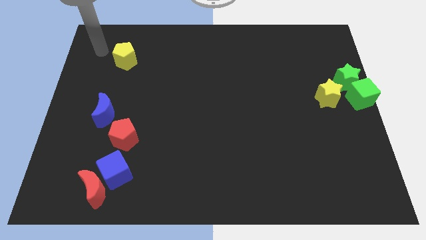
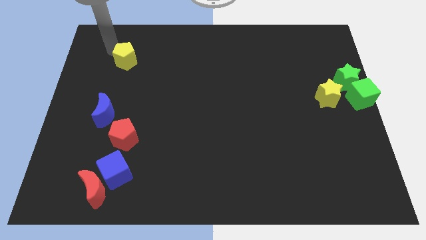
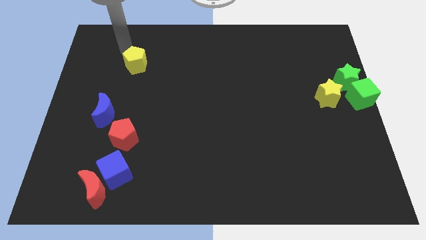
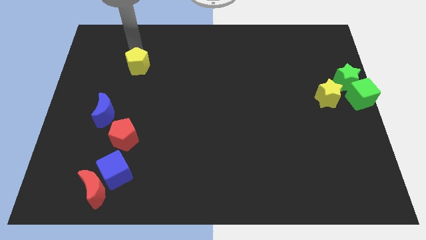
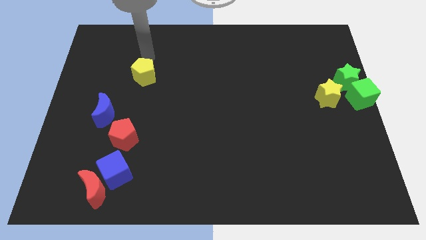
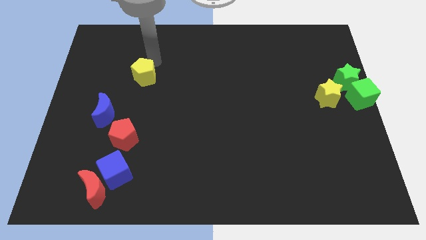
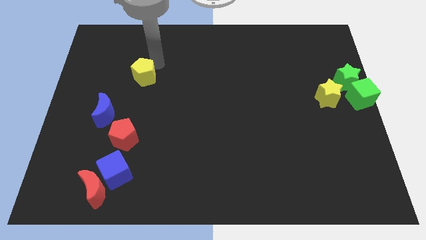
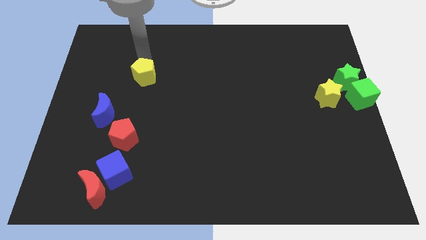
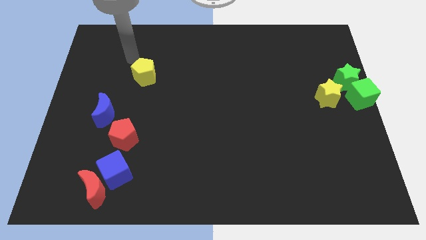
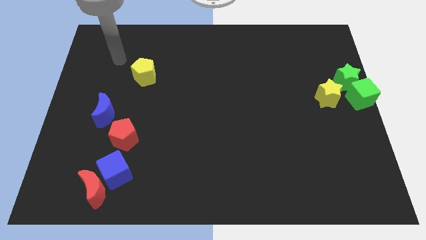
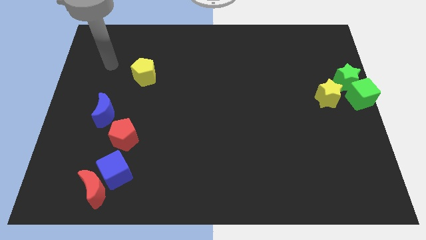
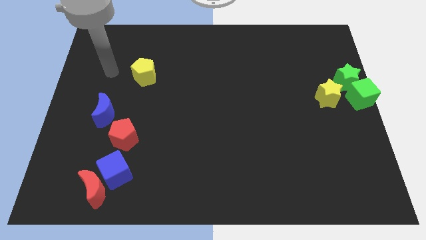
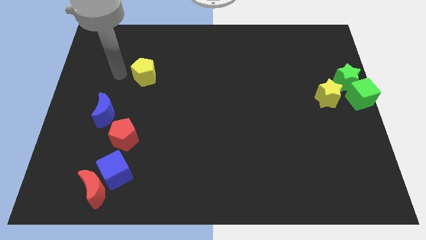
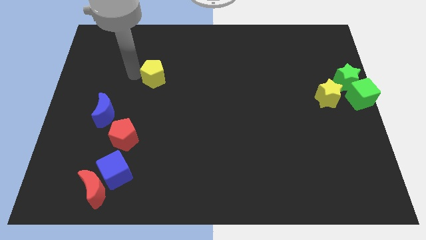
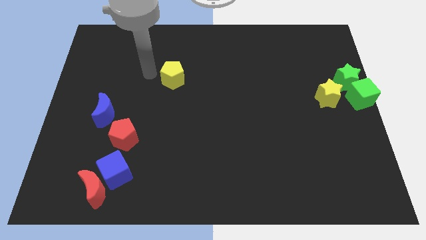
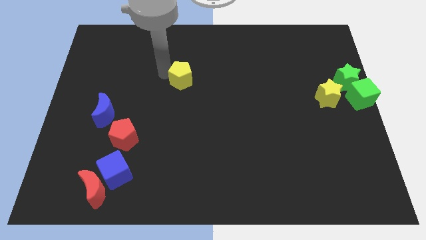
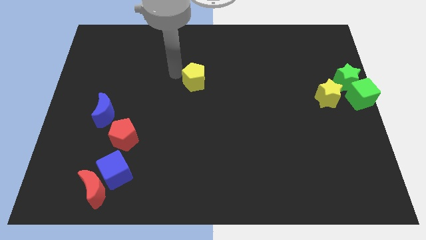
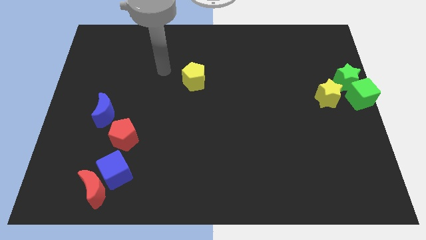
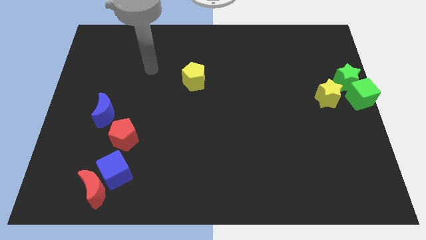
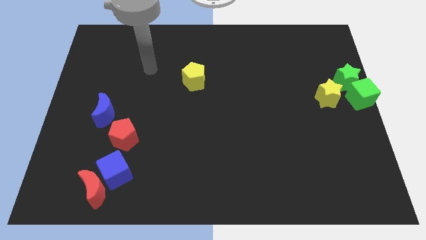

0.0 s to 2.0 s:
move the yellow pentagon towards the center of the board

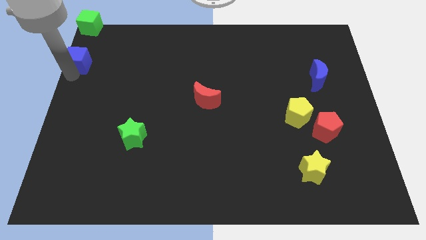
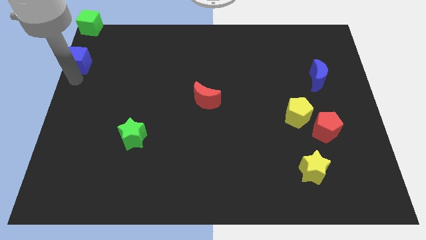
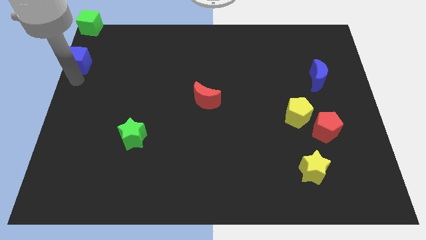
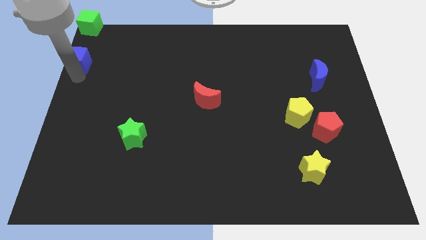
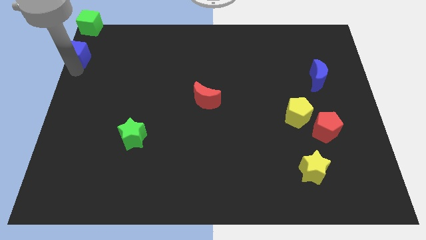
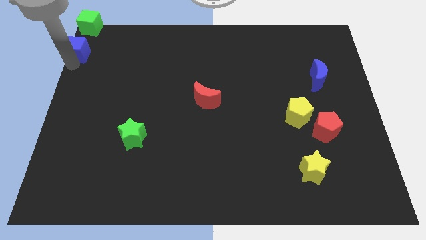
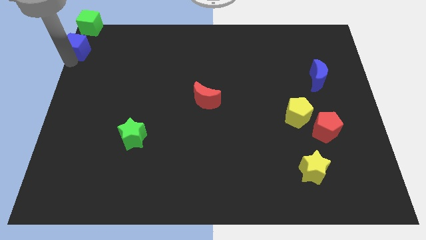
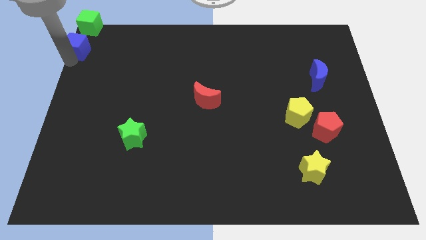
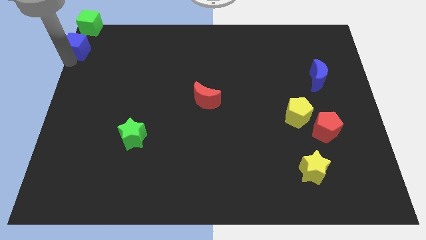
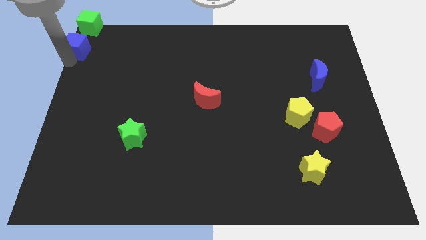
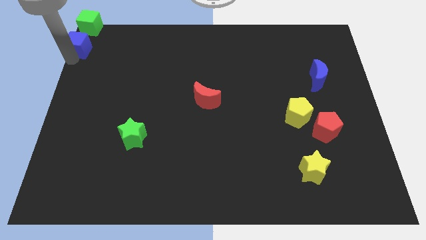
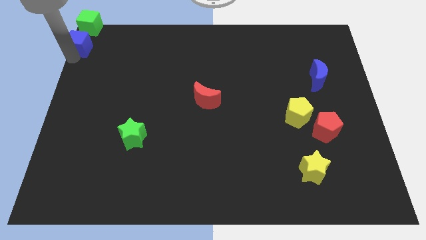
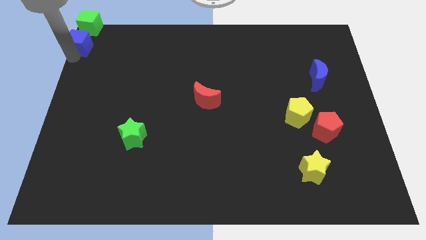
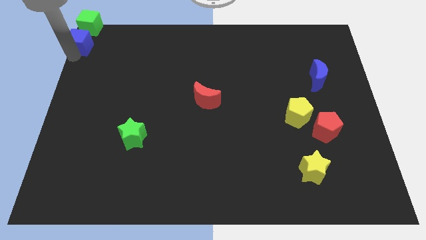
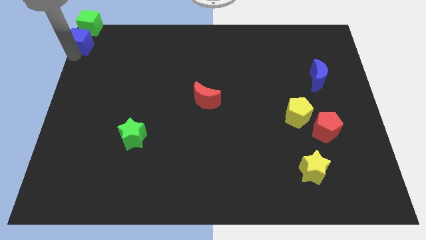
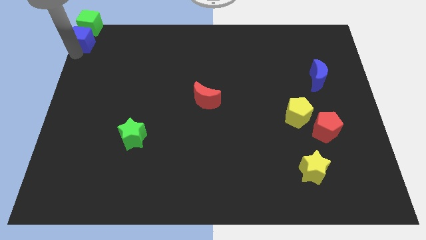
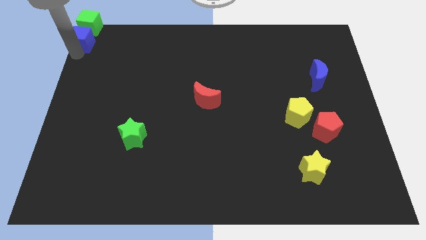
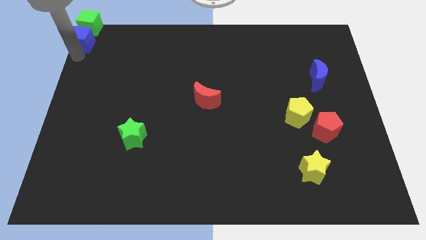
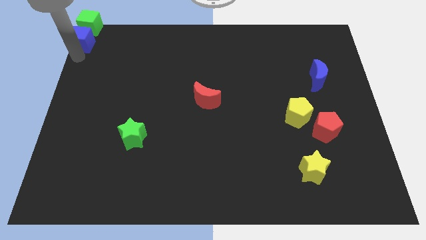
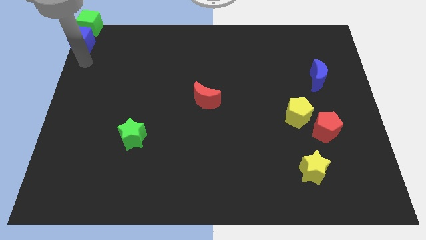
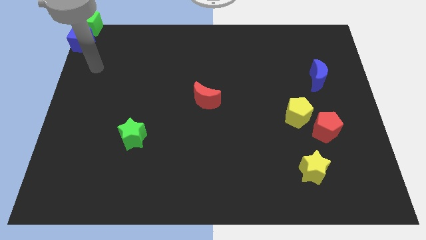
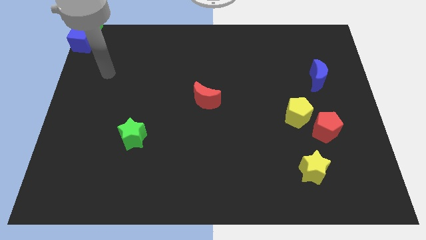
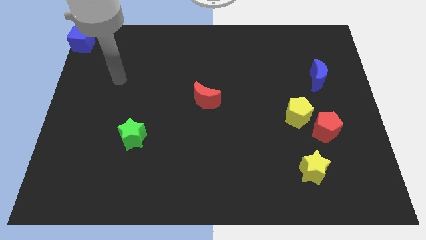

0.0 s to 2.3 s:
push the blue cube into green cube

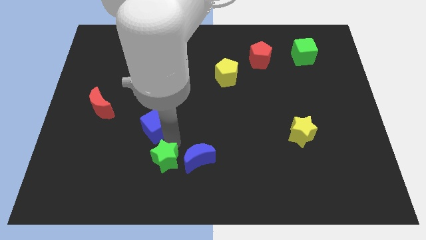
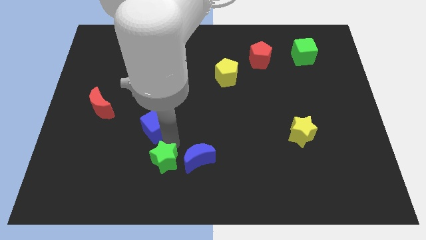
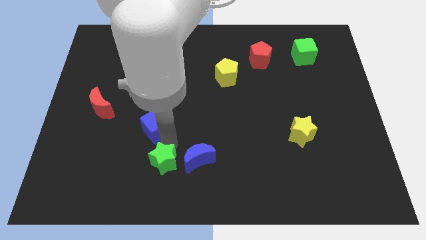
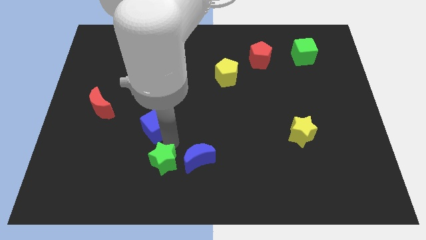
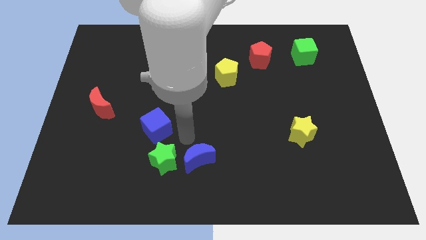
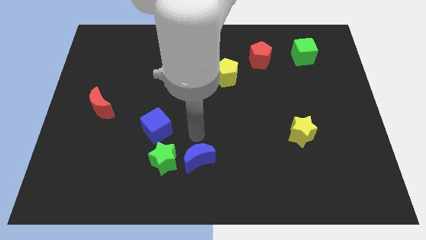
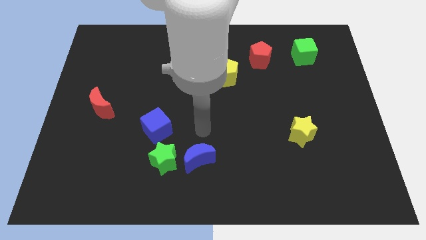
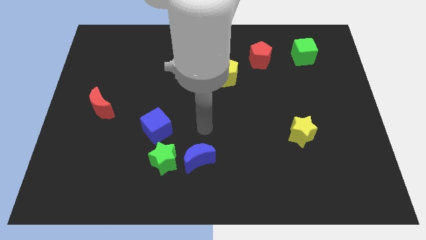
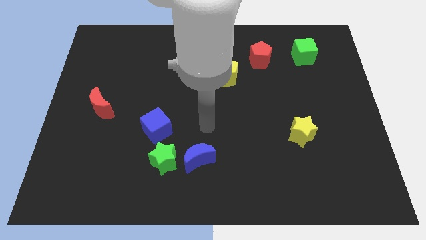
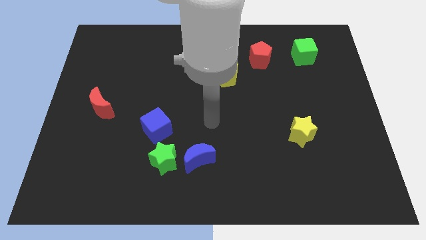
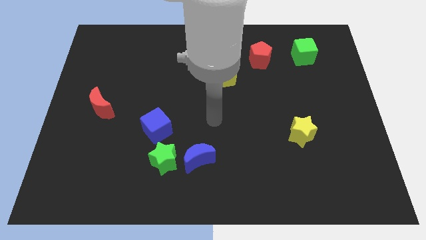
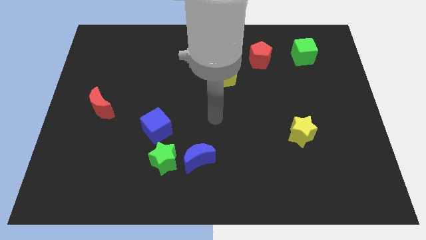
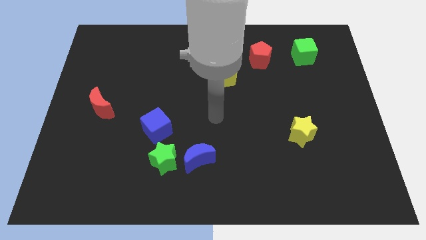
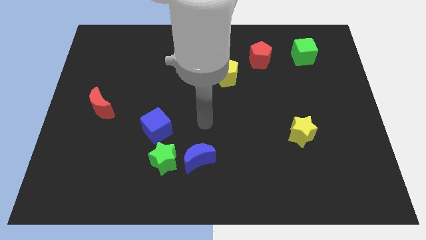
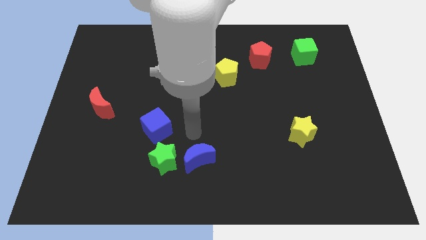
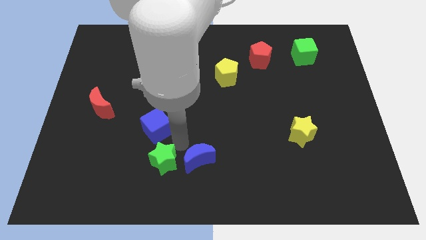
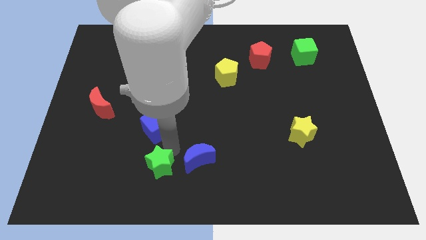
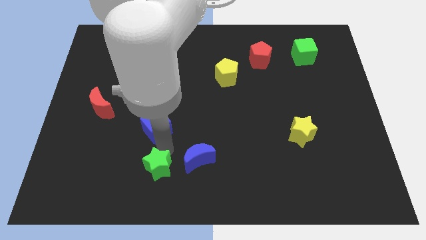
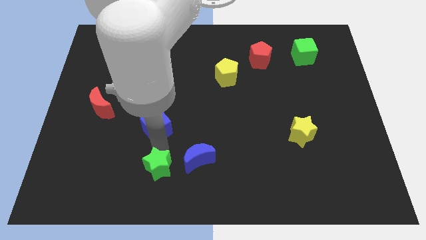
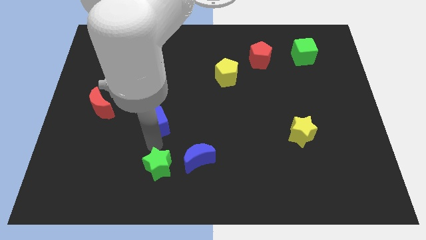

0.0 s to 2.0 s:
separate blue cube from the green star

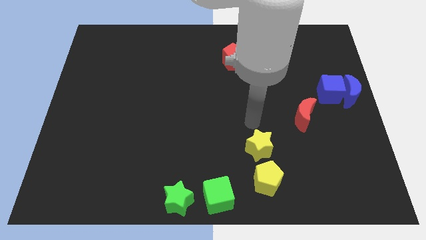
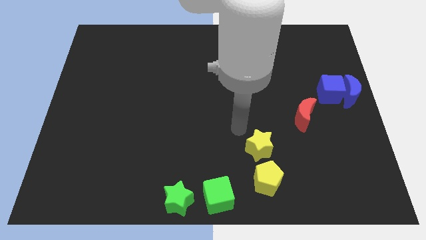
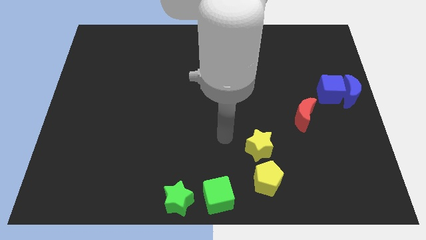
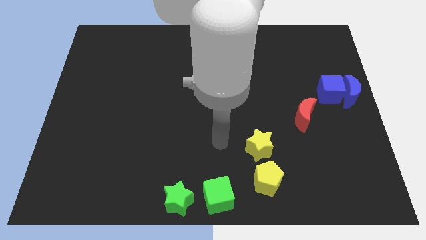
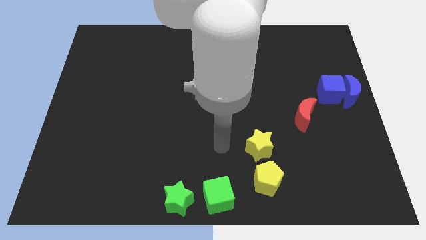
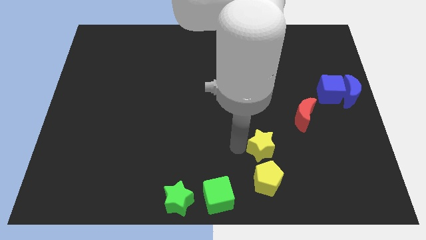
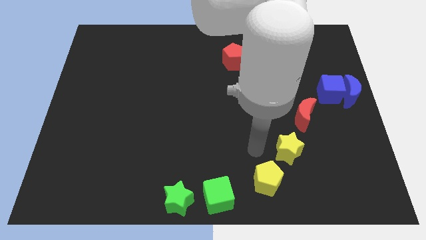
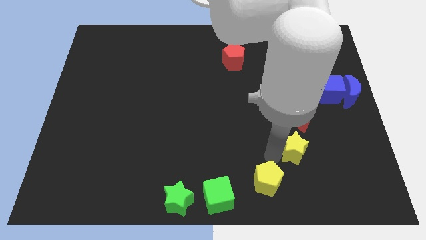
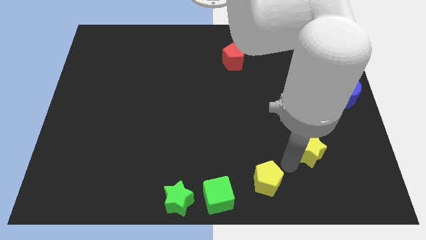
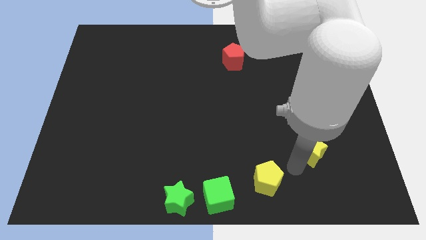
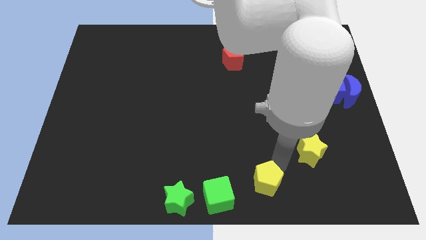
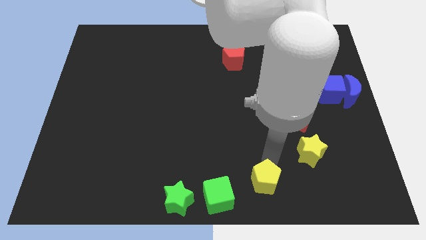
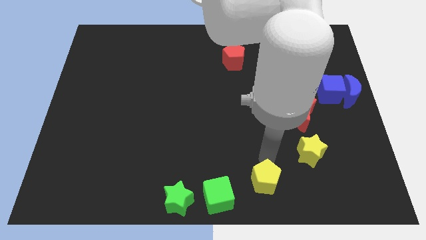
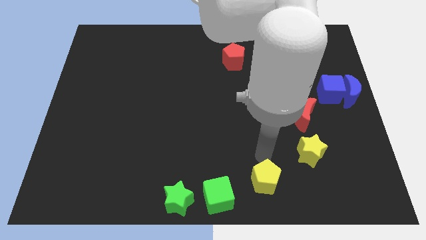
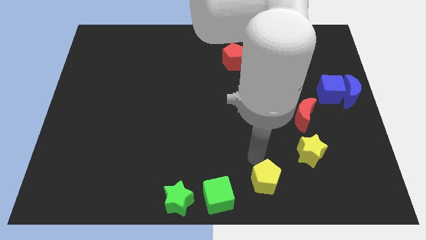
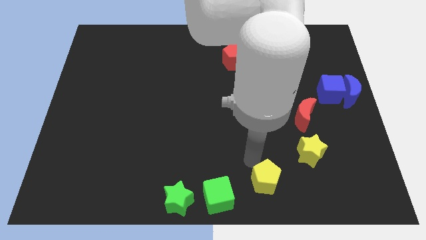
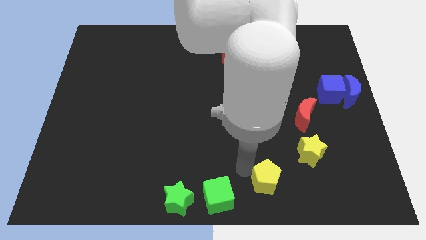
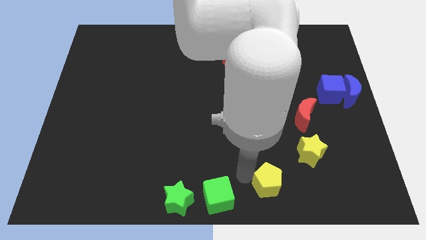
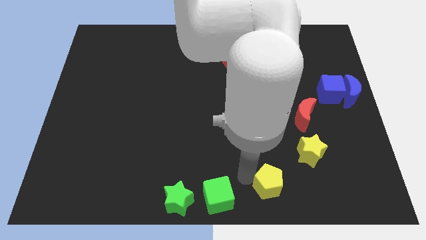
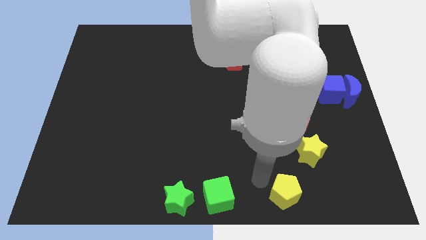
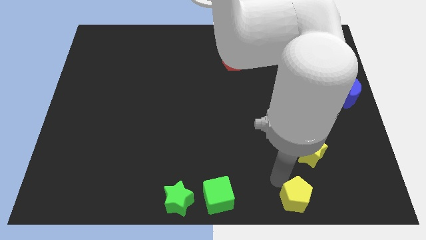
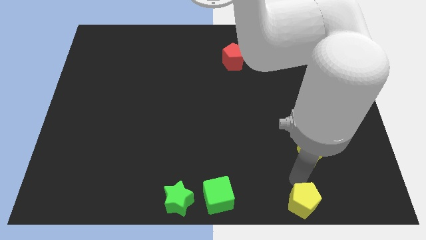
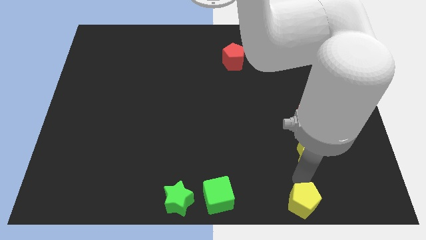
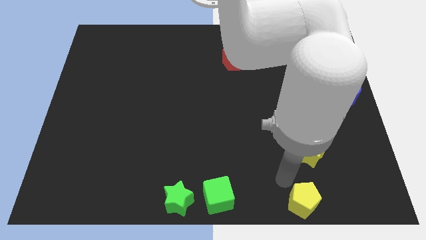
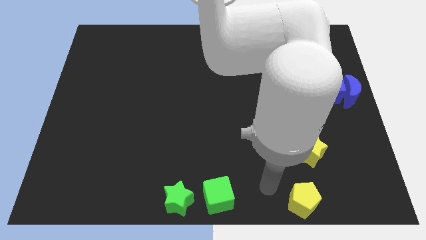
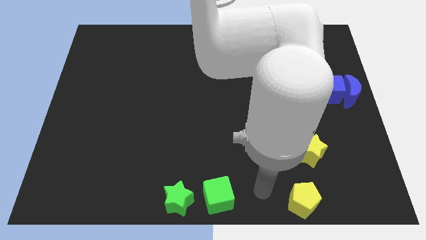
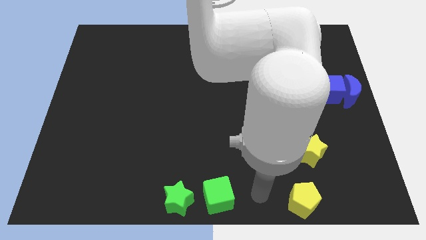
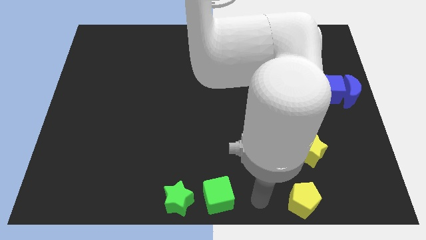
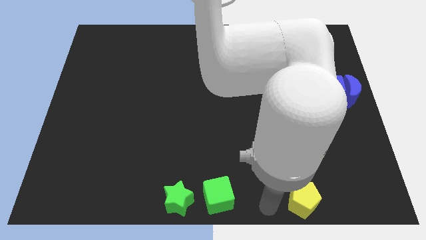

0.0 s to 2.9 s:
move yellow star to the bottom of the red moon
